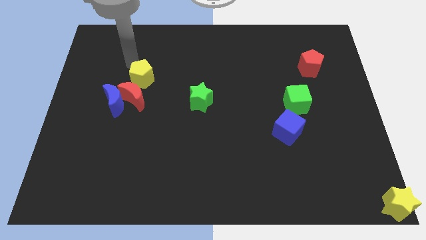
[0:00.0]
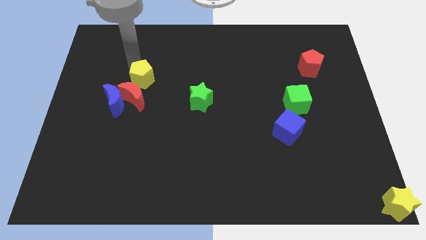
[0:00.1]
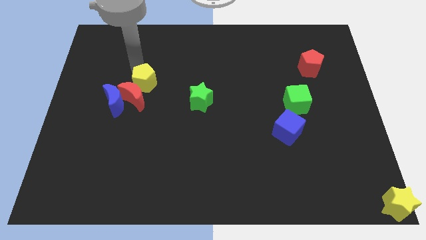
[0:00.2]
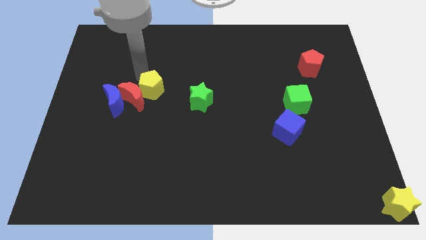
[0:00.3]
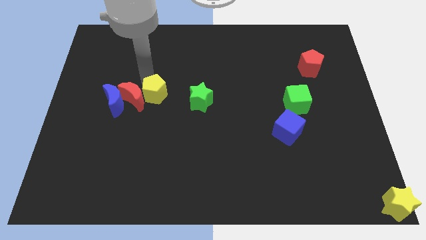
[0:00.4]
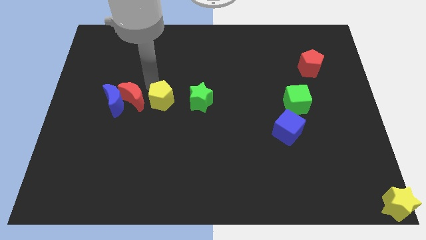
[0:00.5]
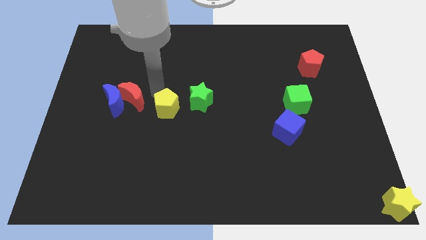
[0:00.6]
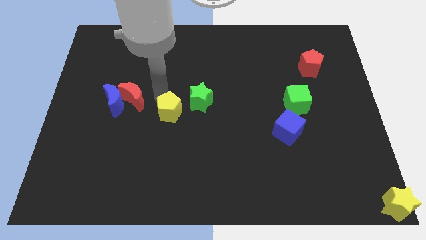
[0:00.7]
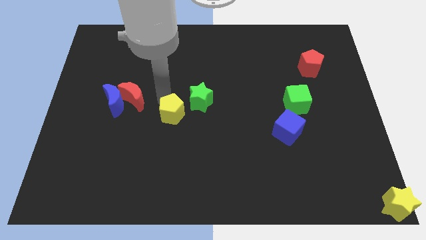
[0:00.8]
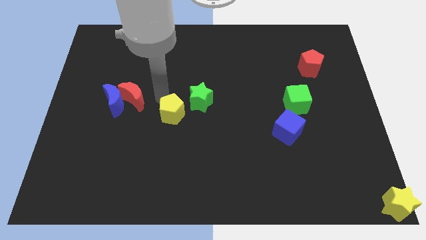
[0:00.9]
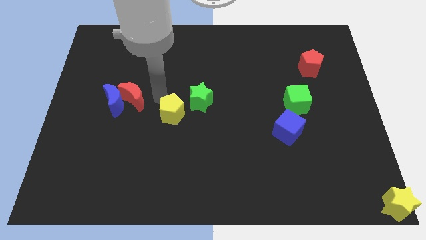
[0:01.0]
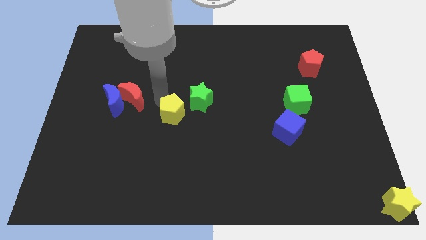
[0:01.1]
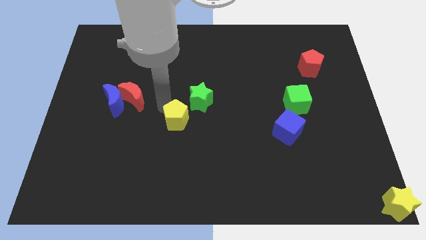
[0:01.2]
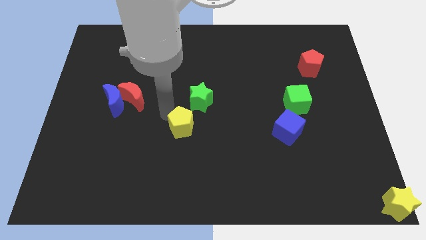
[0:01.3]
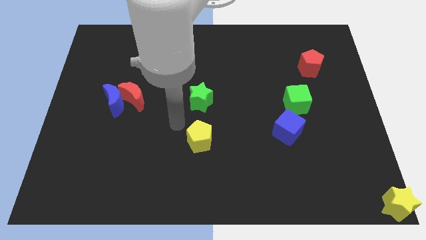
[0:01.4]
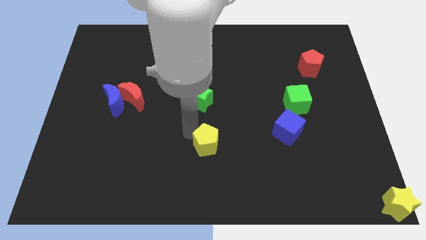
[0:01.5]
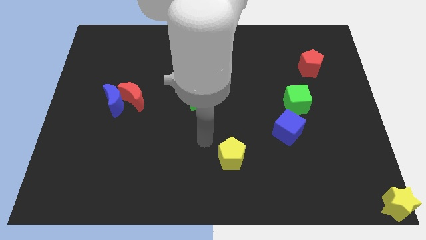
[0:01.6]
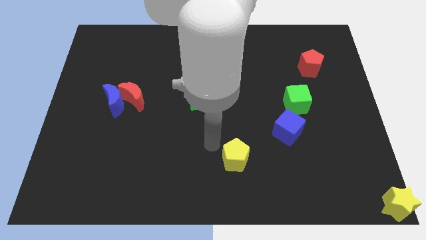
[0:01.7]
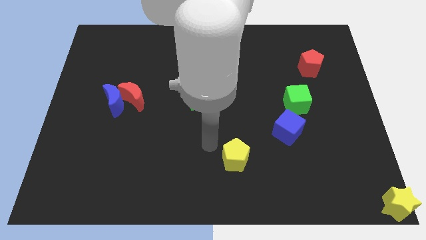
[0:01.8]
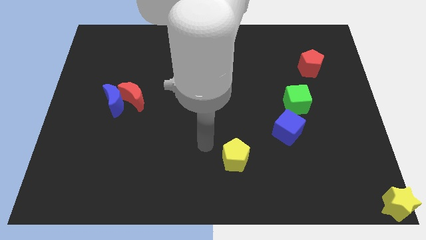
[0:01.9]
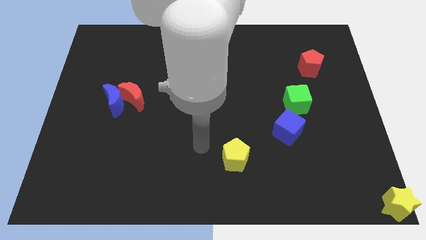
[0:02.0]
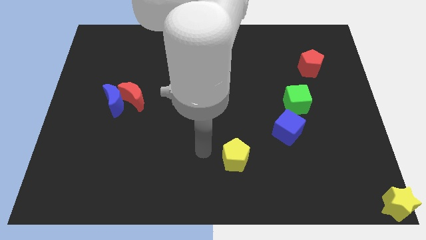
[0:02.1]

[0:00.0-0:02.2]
slide the yellow pentagon diagonal to the blue cube

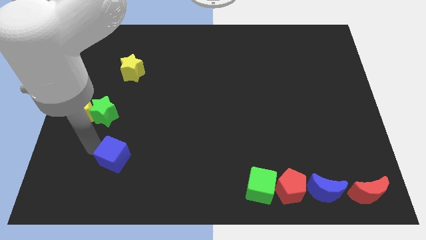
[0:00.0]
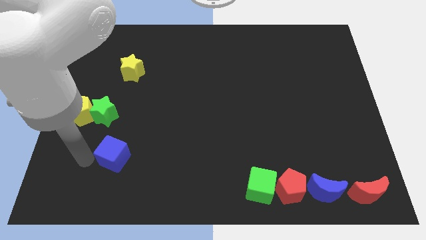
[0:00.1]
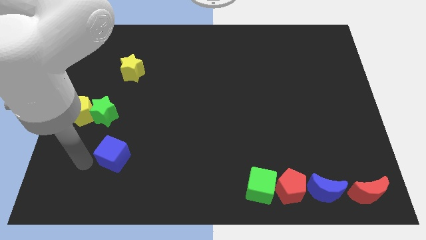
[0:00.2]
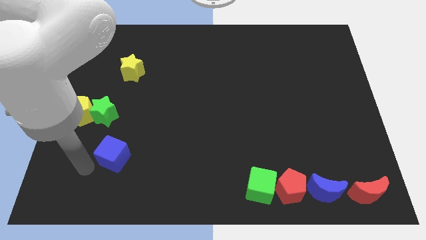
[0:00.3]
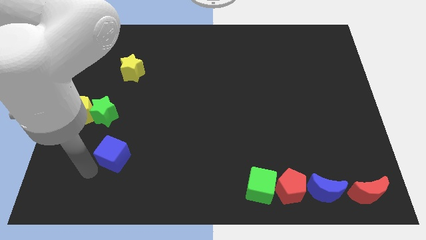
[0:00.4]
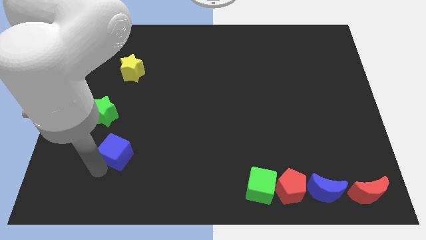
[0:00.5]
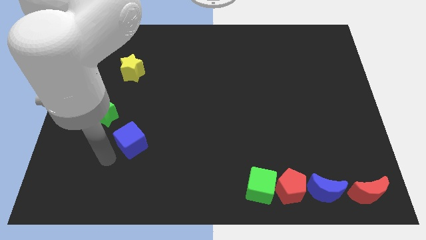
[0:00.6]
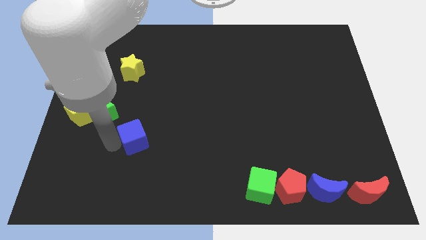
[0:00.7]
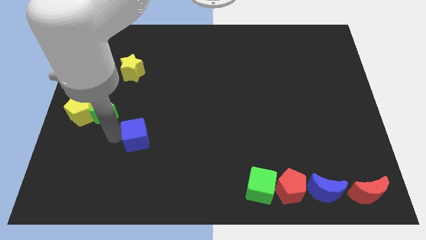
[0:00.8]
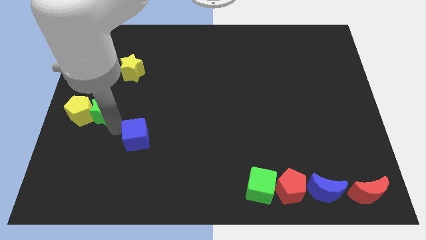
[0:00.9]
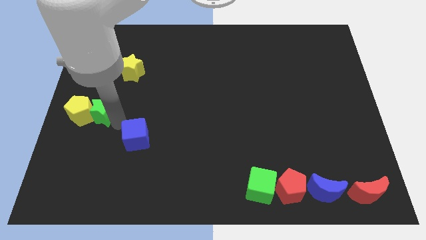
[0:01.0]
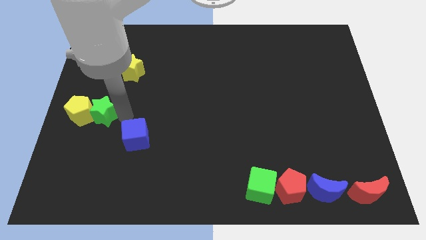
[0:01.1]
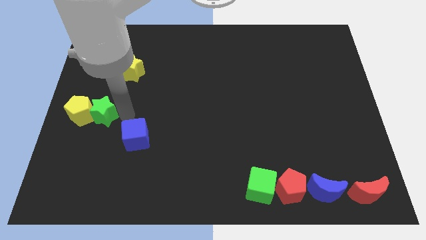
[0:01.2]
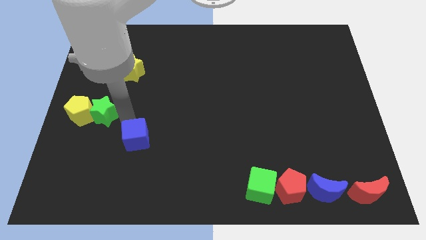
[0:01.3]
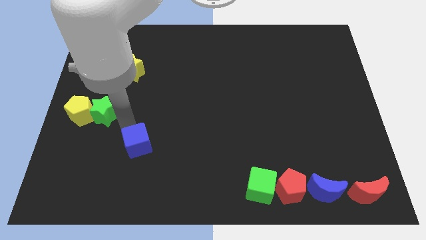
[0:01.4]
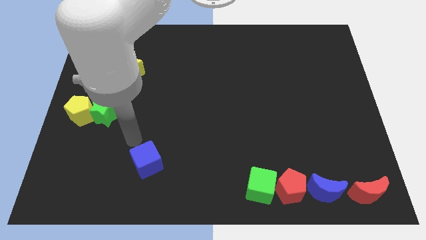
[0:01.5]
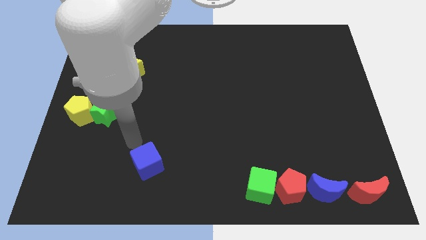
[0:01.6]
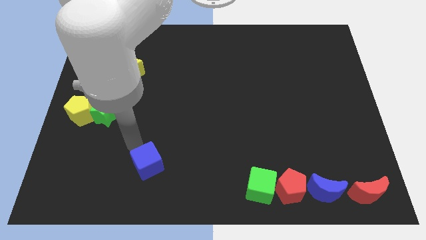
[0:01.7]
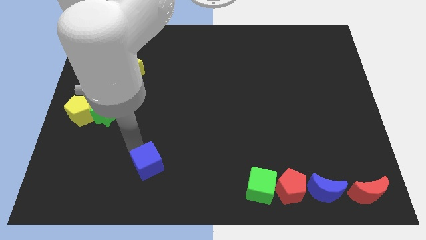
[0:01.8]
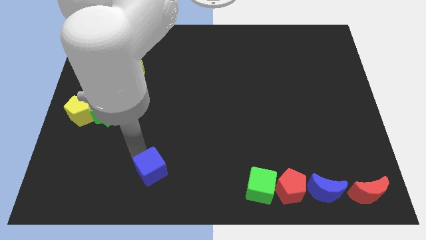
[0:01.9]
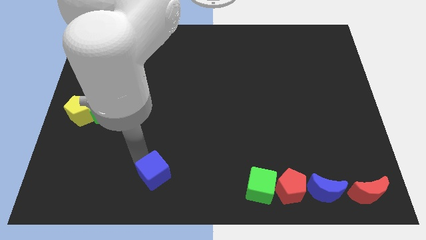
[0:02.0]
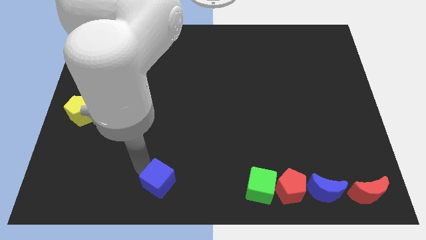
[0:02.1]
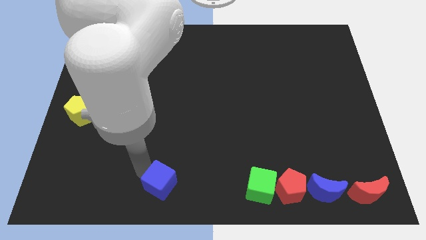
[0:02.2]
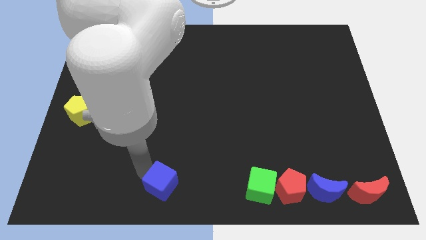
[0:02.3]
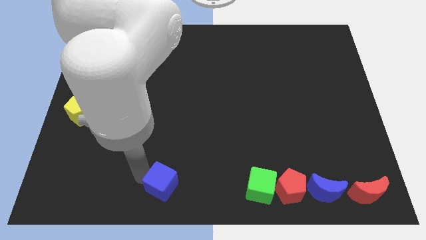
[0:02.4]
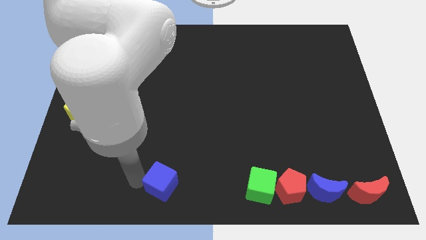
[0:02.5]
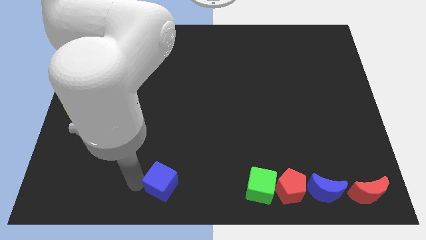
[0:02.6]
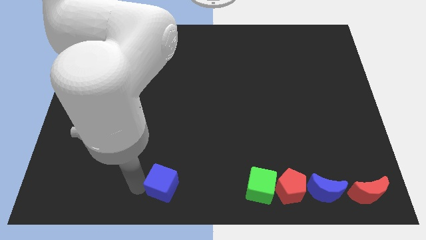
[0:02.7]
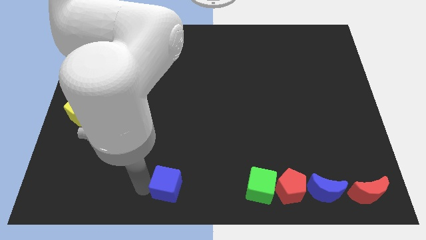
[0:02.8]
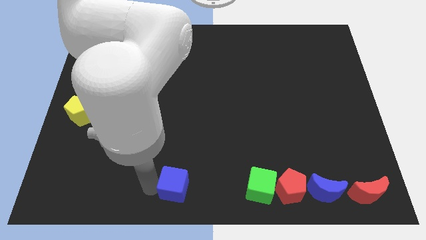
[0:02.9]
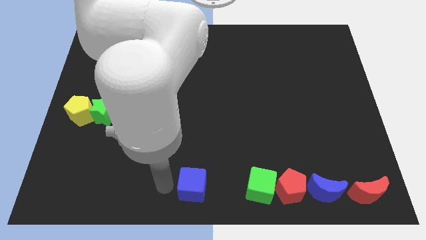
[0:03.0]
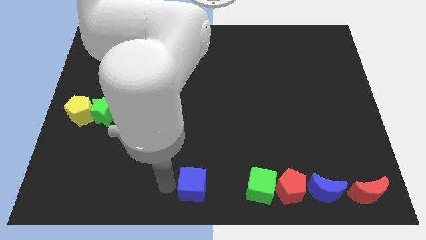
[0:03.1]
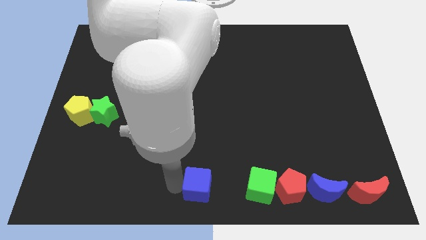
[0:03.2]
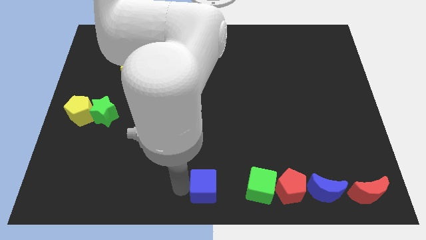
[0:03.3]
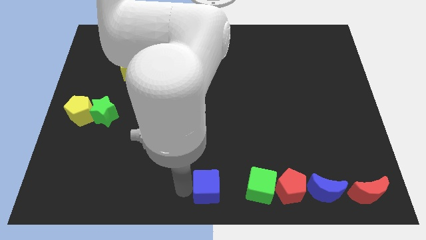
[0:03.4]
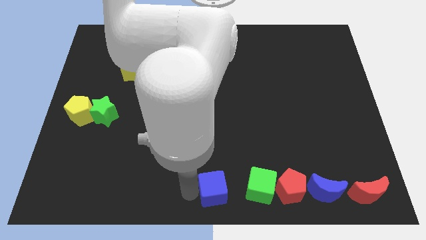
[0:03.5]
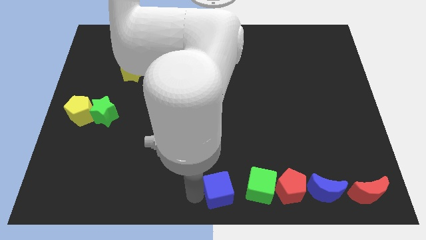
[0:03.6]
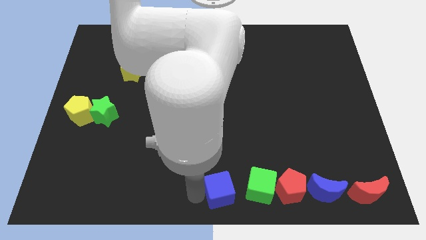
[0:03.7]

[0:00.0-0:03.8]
place the blue cube at the bottom center of the board

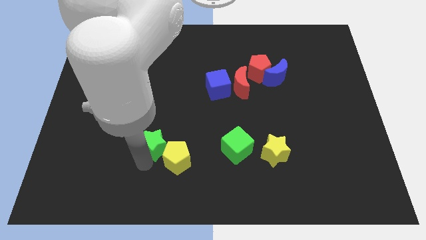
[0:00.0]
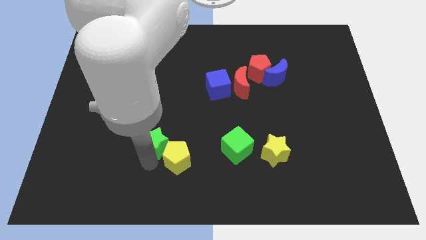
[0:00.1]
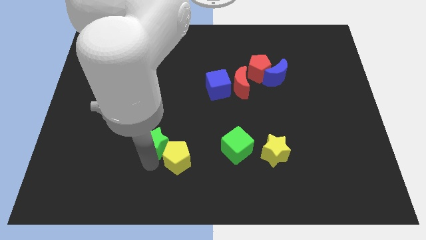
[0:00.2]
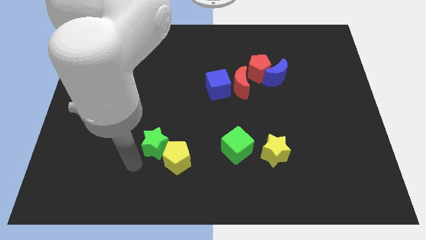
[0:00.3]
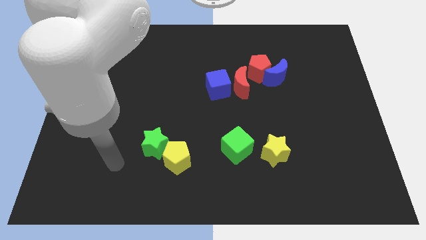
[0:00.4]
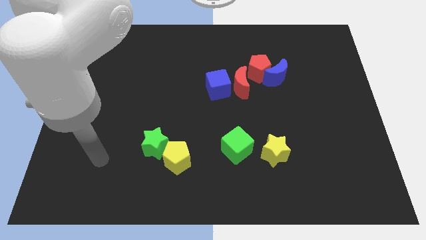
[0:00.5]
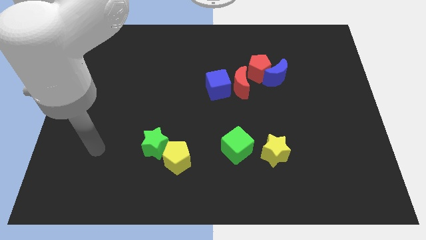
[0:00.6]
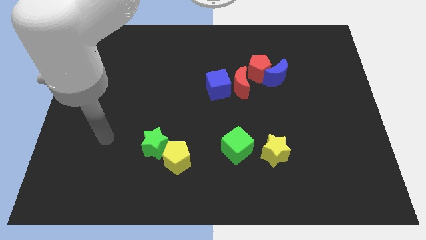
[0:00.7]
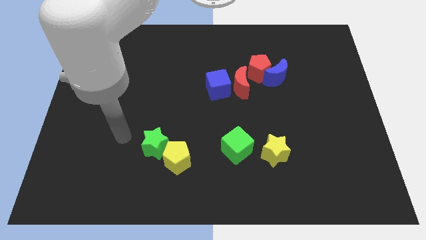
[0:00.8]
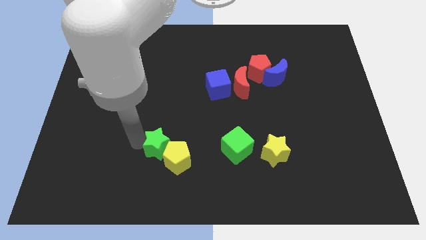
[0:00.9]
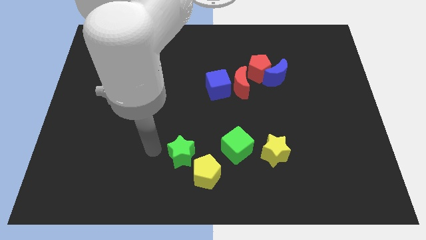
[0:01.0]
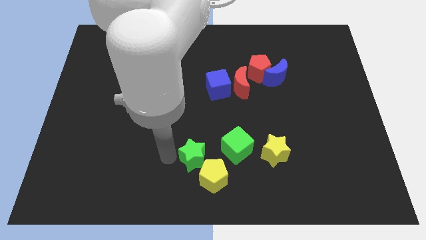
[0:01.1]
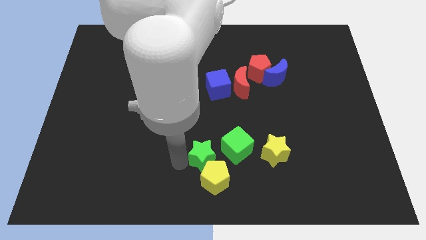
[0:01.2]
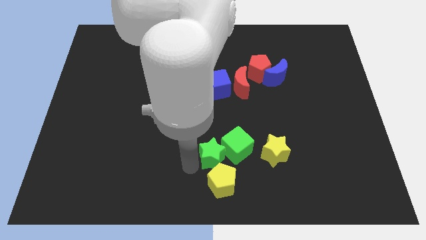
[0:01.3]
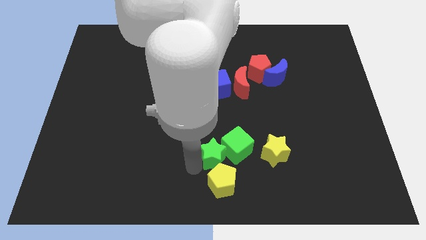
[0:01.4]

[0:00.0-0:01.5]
move green star and yellow pentagon towards the bottom center

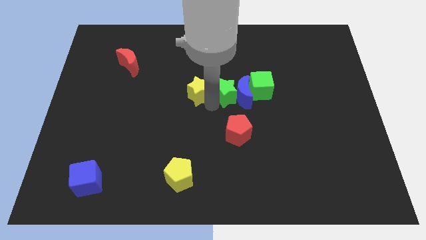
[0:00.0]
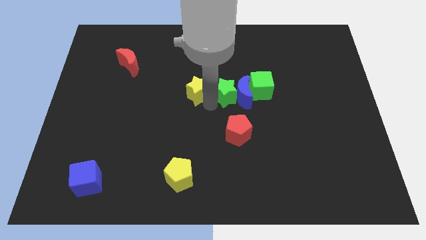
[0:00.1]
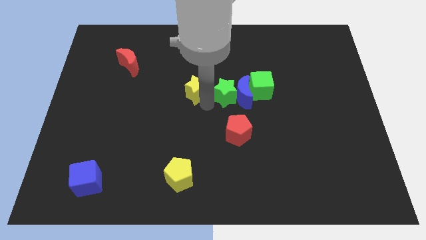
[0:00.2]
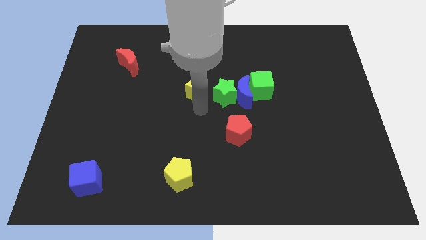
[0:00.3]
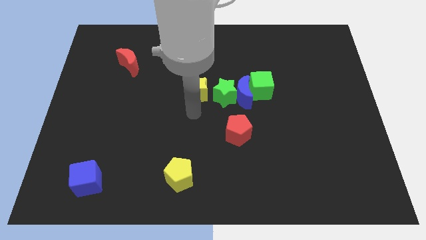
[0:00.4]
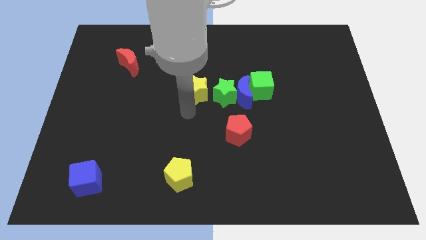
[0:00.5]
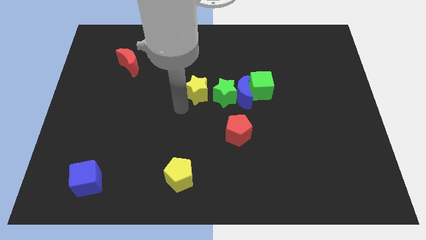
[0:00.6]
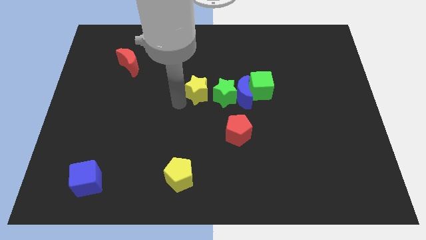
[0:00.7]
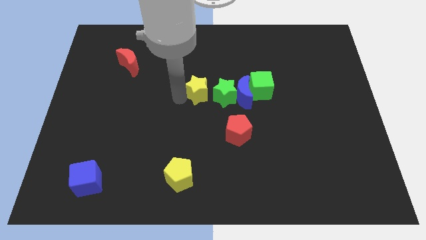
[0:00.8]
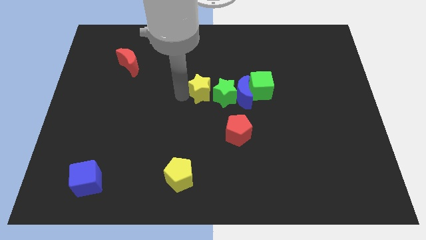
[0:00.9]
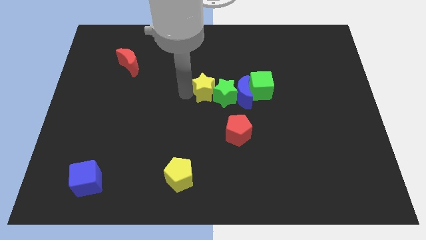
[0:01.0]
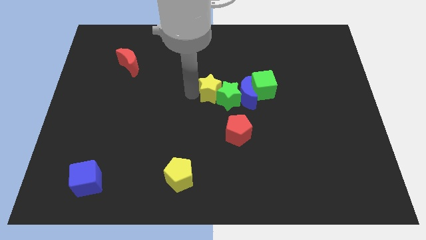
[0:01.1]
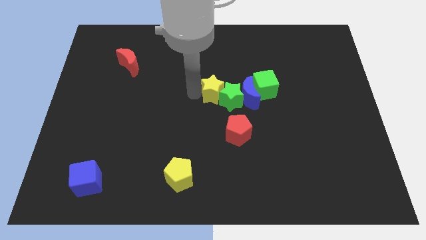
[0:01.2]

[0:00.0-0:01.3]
push the yellow star into the left side of the green star

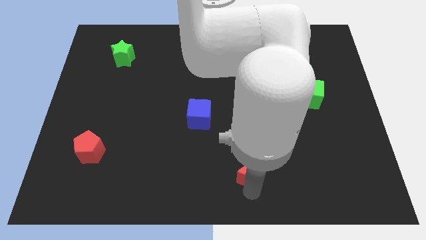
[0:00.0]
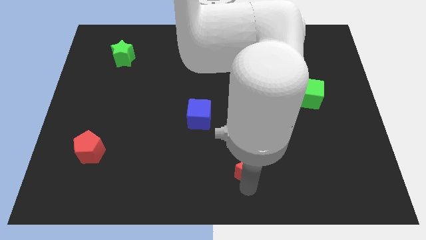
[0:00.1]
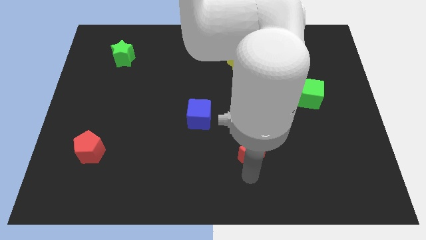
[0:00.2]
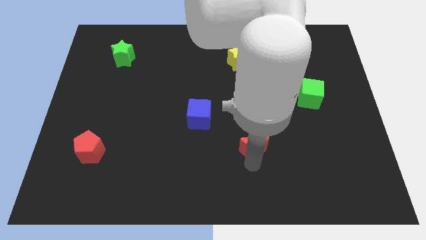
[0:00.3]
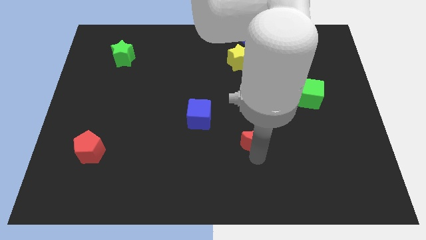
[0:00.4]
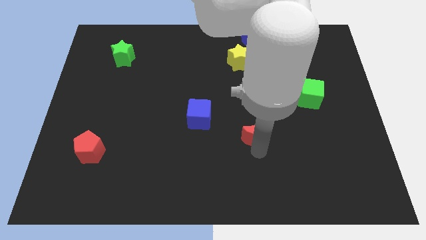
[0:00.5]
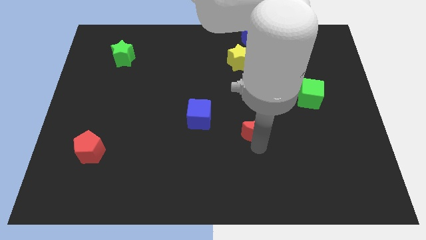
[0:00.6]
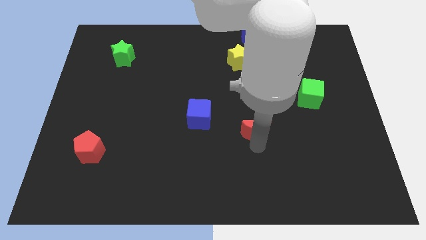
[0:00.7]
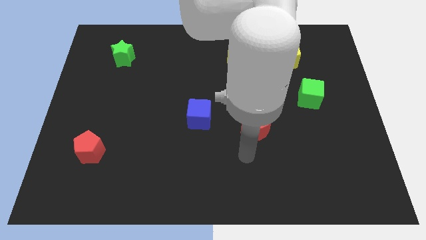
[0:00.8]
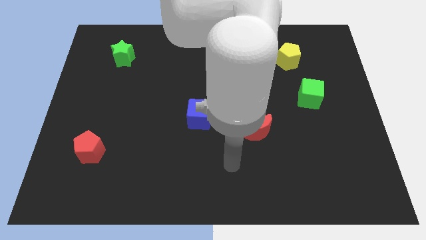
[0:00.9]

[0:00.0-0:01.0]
place the red crescent vertically below the yellow star
